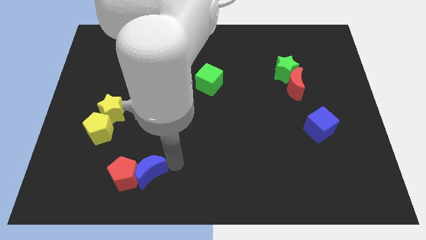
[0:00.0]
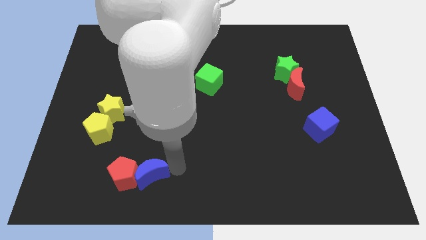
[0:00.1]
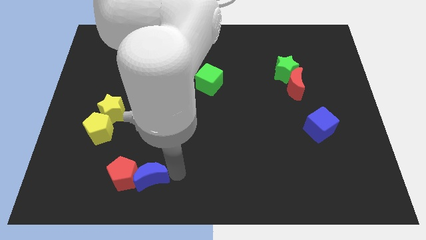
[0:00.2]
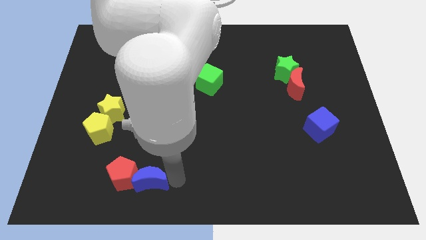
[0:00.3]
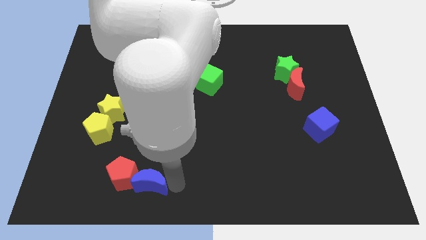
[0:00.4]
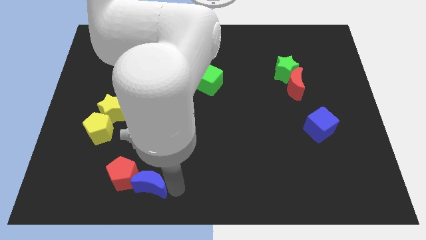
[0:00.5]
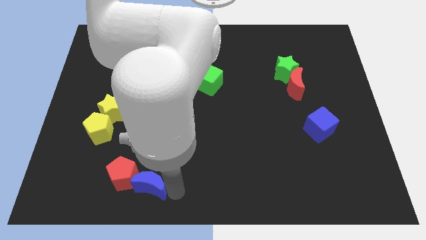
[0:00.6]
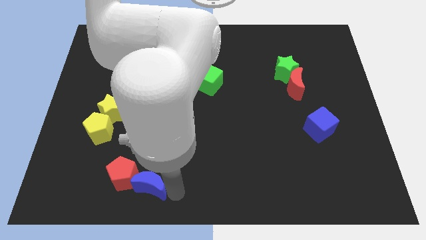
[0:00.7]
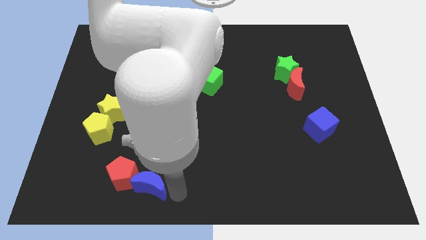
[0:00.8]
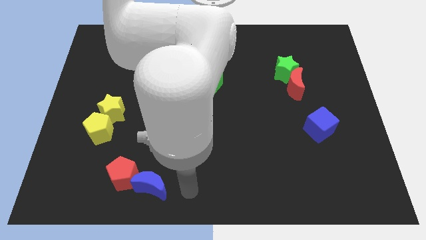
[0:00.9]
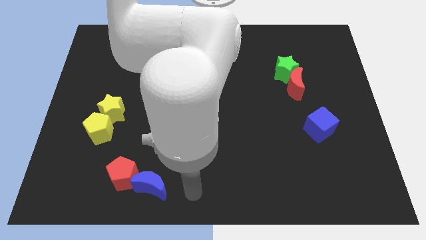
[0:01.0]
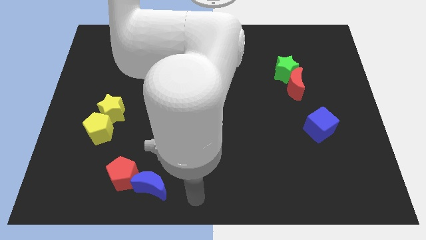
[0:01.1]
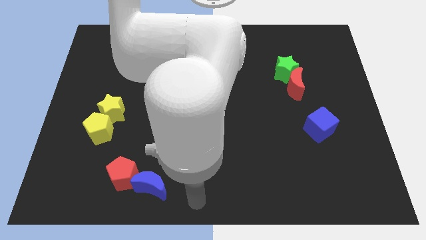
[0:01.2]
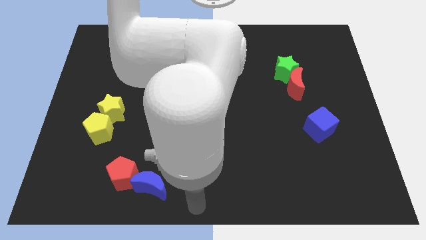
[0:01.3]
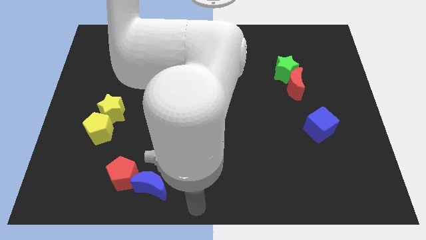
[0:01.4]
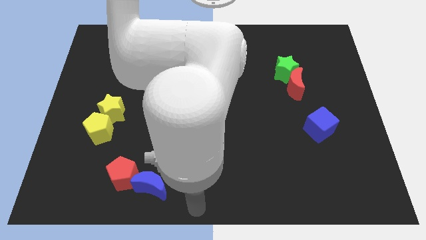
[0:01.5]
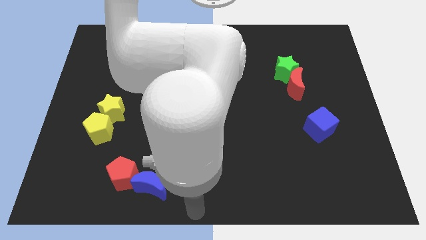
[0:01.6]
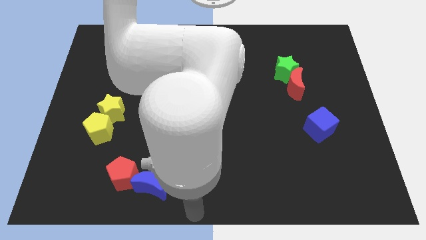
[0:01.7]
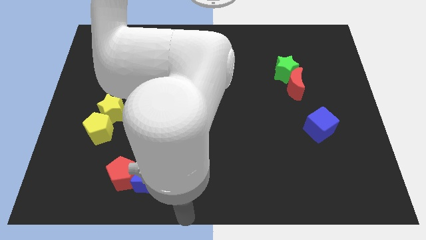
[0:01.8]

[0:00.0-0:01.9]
slide the blue crescent to the bottom right side of blue crescent

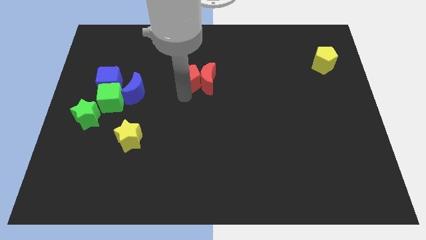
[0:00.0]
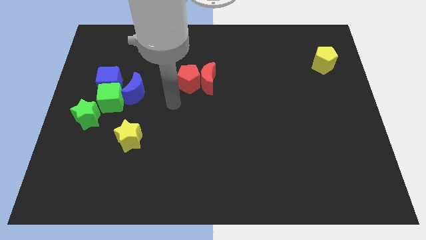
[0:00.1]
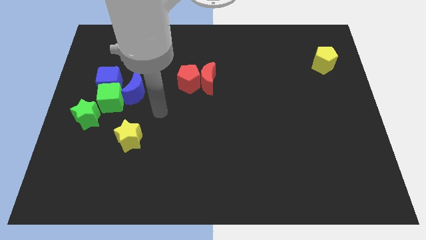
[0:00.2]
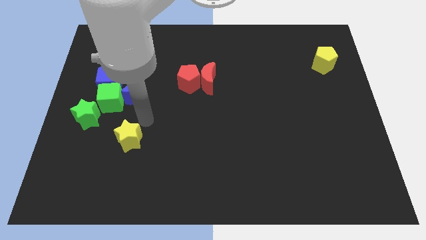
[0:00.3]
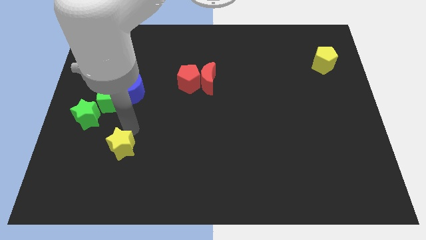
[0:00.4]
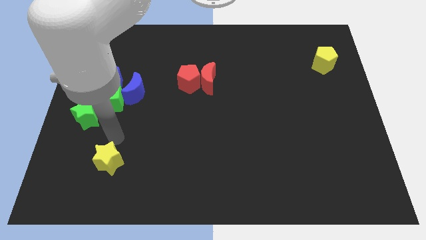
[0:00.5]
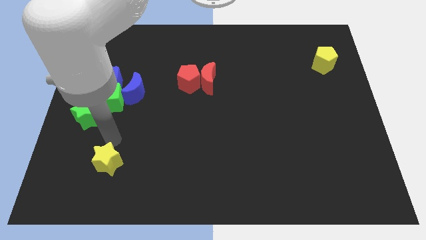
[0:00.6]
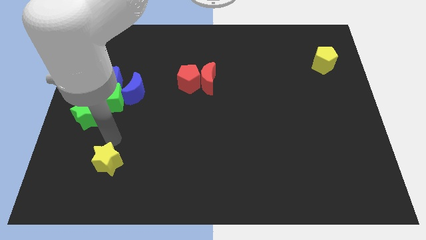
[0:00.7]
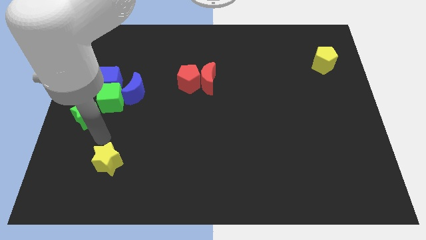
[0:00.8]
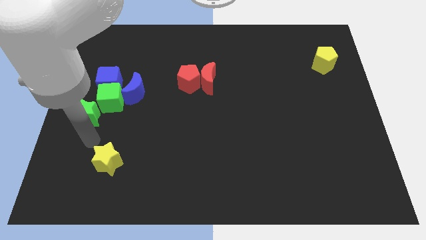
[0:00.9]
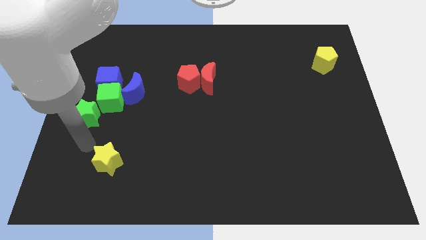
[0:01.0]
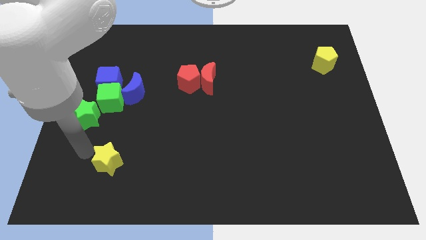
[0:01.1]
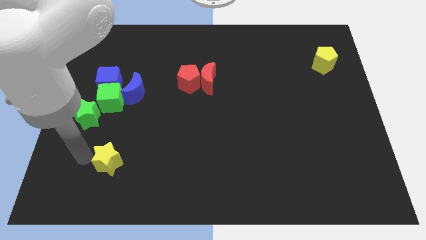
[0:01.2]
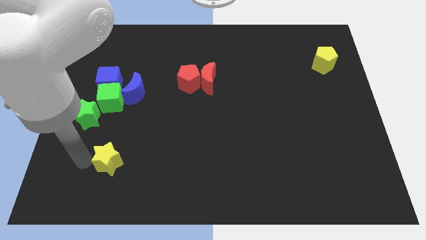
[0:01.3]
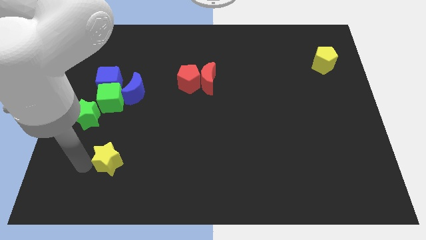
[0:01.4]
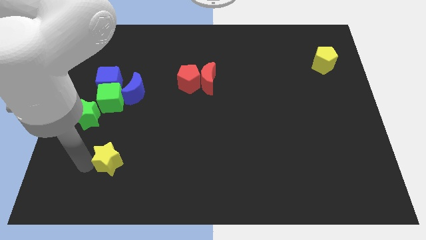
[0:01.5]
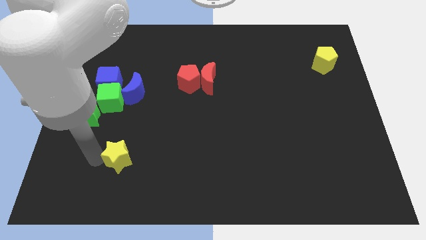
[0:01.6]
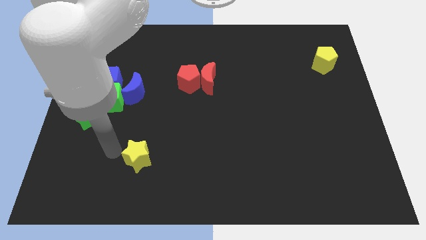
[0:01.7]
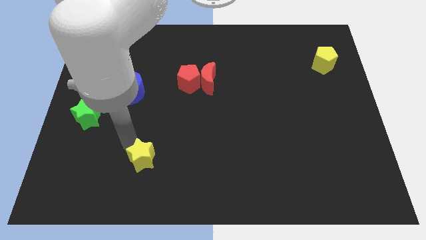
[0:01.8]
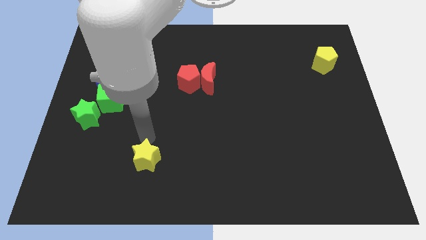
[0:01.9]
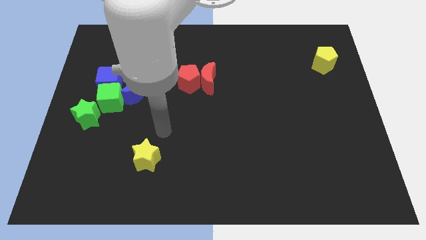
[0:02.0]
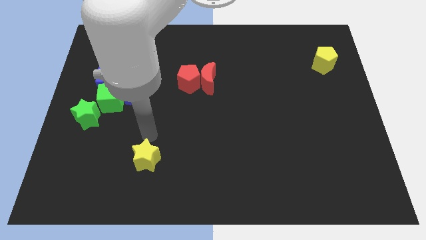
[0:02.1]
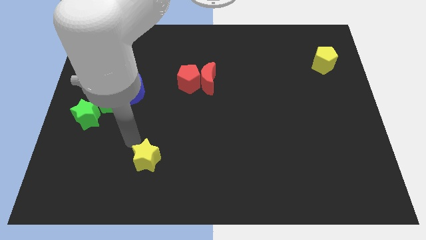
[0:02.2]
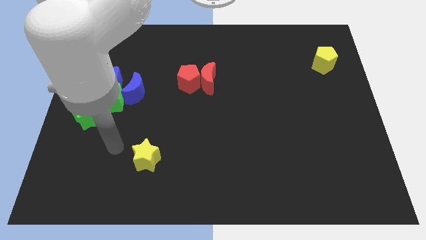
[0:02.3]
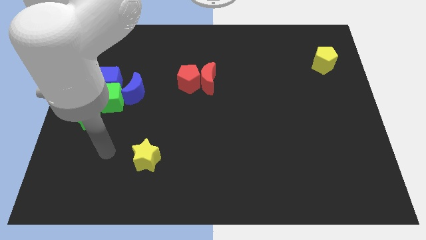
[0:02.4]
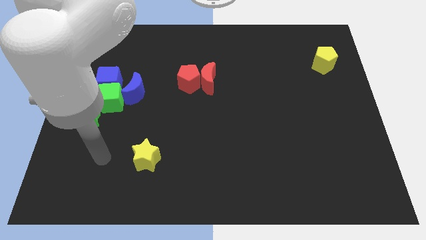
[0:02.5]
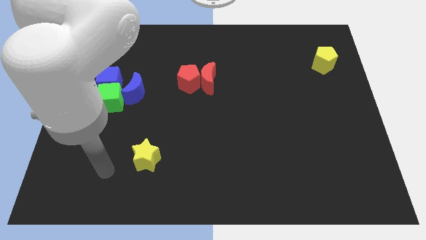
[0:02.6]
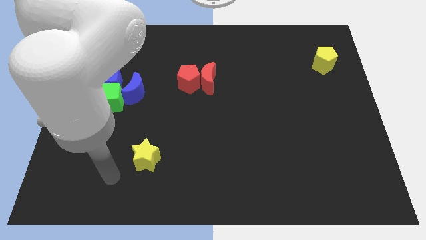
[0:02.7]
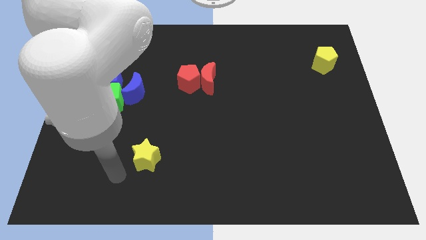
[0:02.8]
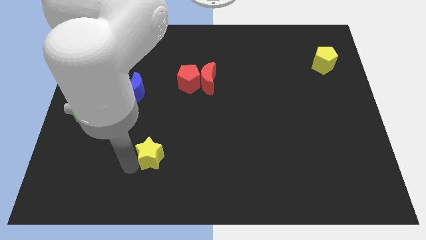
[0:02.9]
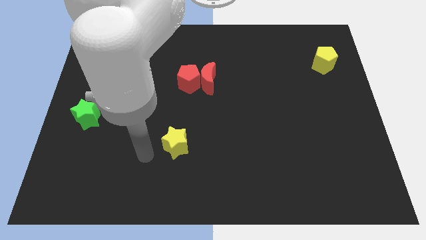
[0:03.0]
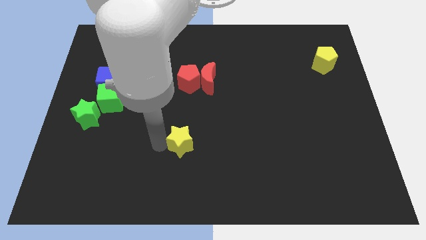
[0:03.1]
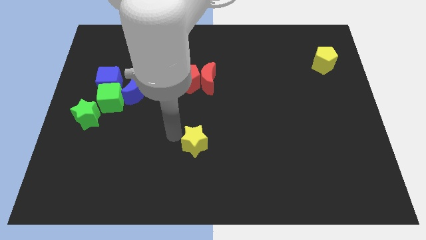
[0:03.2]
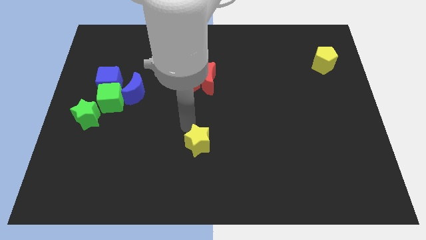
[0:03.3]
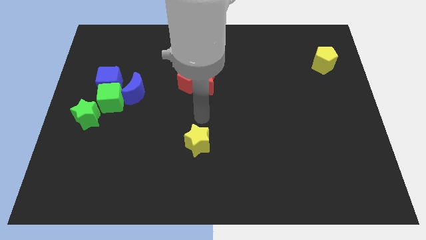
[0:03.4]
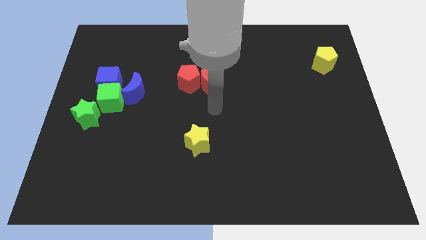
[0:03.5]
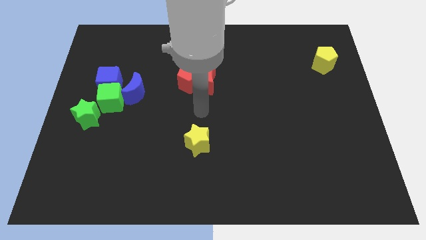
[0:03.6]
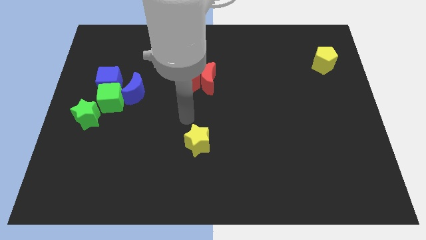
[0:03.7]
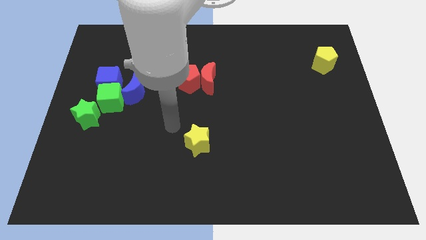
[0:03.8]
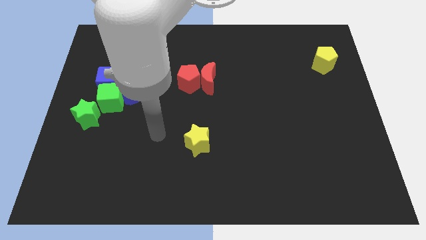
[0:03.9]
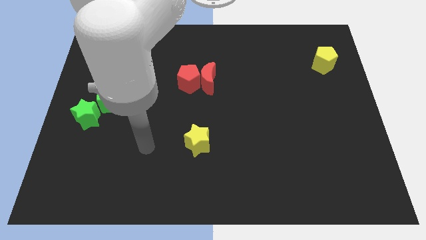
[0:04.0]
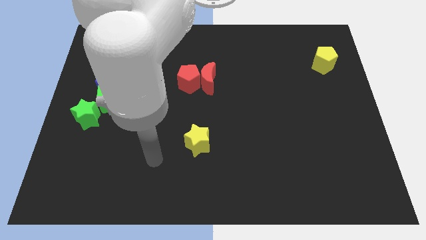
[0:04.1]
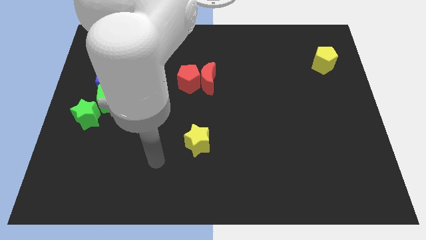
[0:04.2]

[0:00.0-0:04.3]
put the yellow star underneath the bottom side of the red blocks

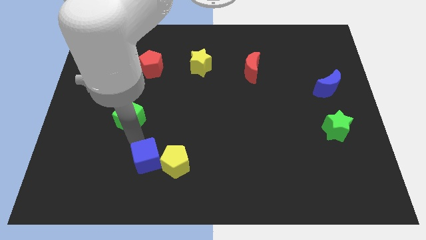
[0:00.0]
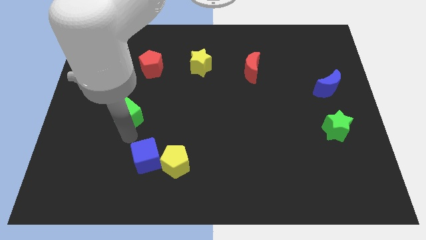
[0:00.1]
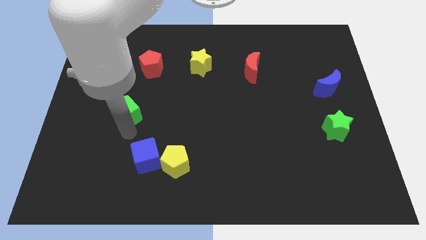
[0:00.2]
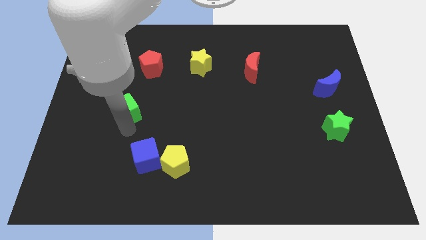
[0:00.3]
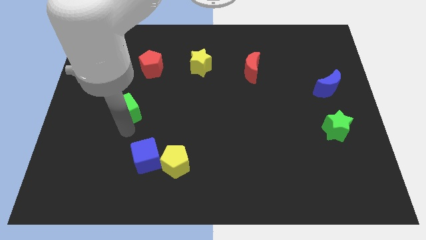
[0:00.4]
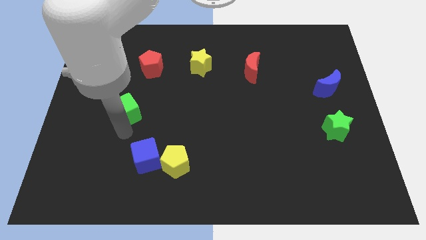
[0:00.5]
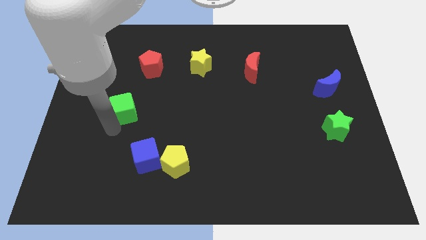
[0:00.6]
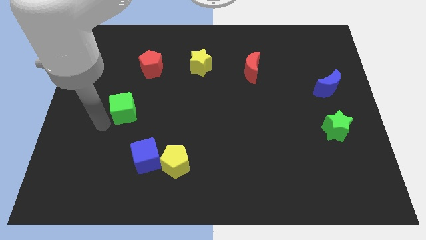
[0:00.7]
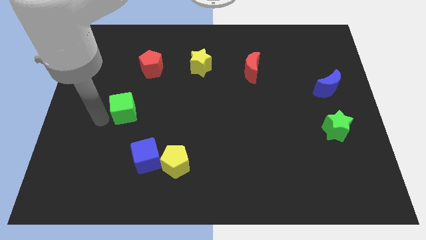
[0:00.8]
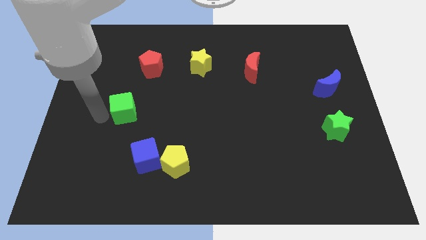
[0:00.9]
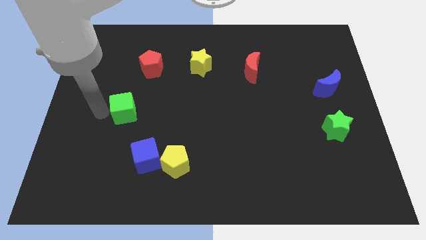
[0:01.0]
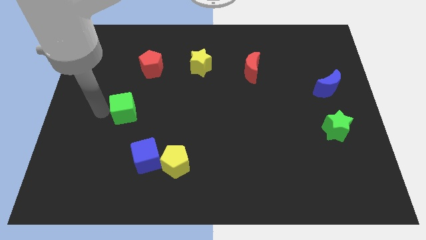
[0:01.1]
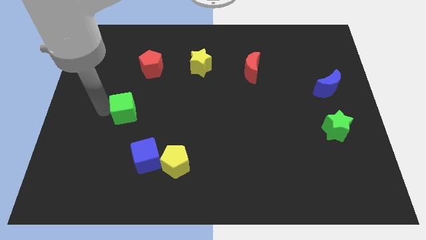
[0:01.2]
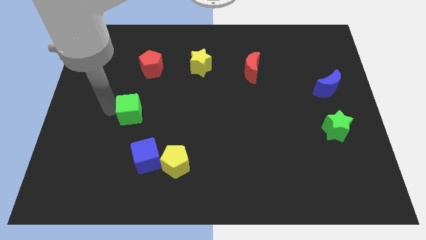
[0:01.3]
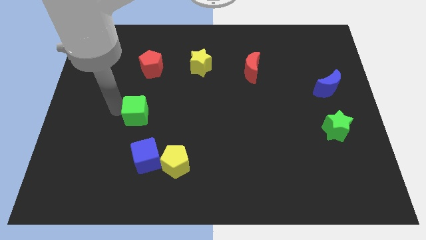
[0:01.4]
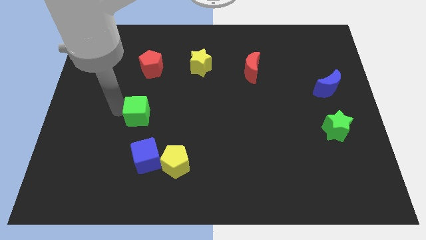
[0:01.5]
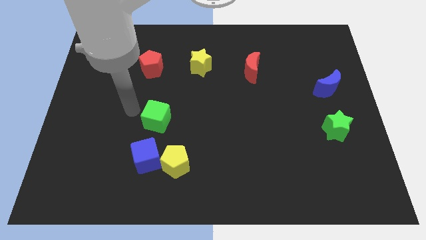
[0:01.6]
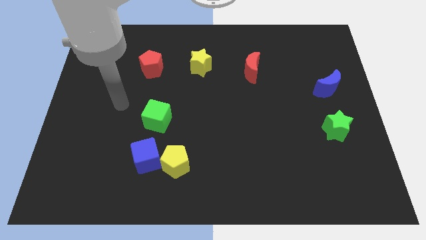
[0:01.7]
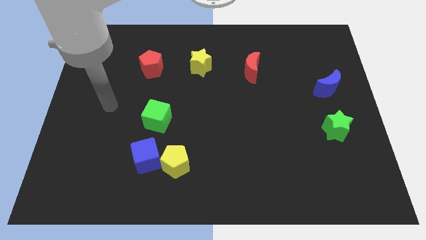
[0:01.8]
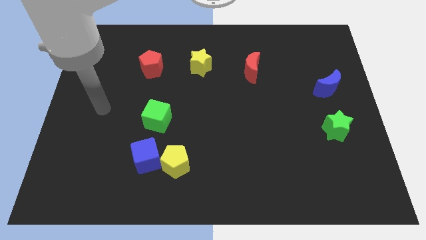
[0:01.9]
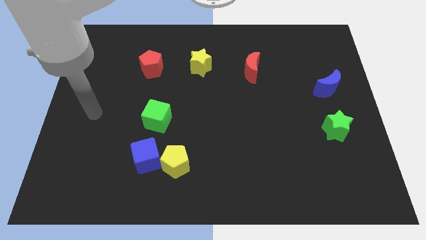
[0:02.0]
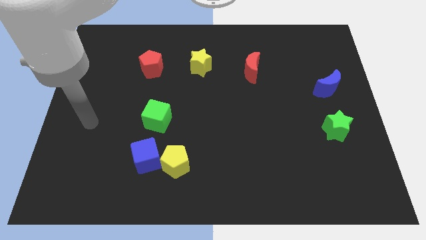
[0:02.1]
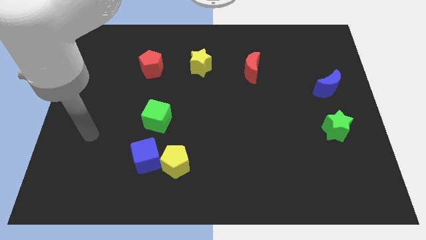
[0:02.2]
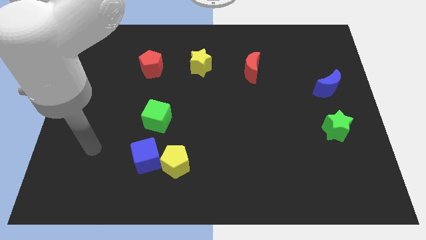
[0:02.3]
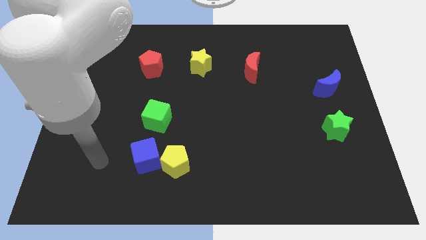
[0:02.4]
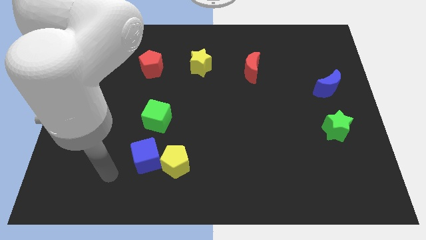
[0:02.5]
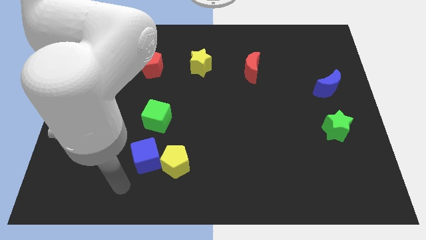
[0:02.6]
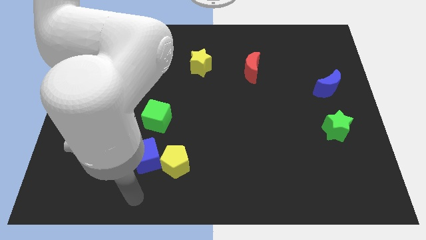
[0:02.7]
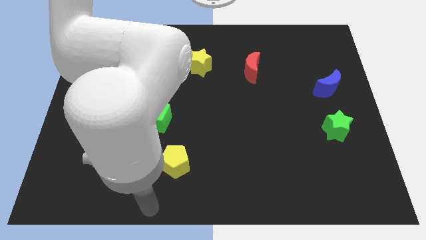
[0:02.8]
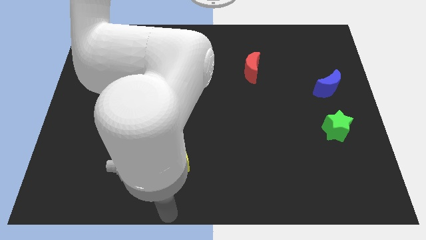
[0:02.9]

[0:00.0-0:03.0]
place the green cube above the blue cube and the yellow pentagon
